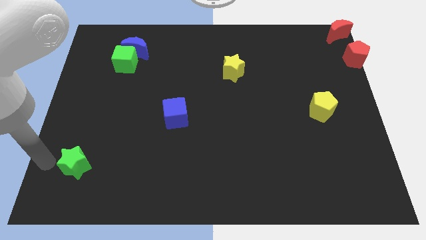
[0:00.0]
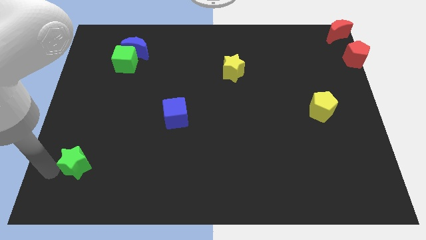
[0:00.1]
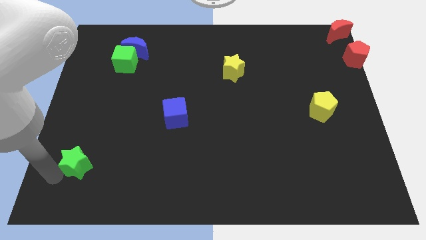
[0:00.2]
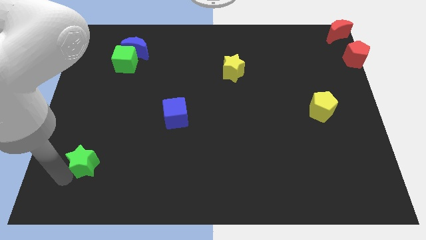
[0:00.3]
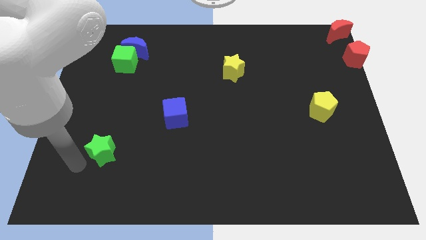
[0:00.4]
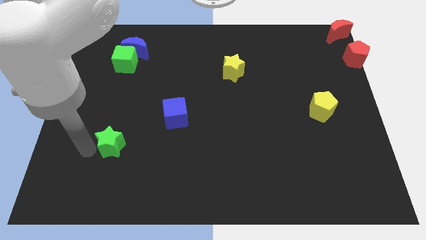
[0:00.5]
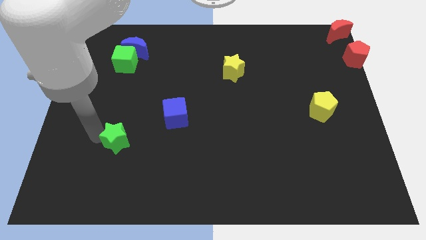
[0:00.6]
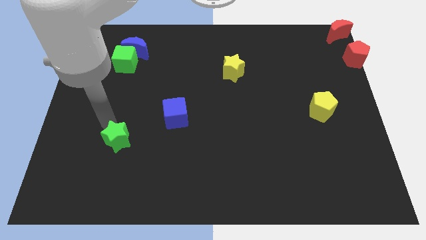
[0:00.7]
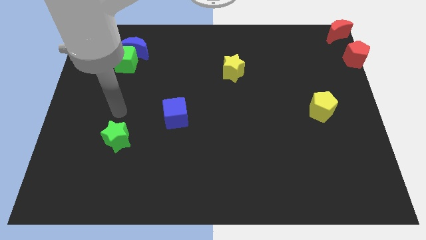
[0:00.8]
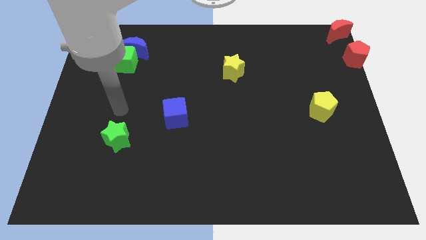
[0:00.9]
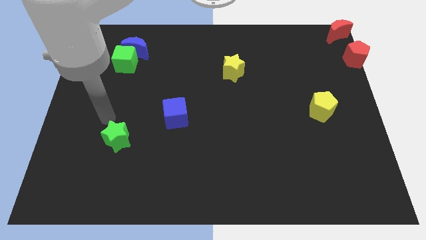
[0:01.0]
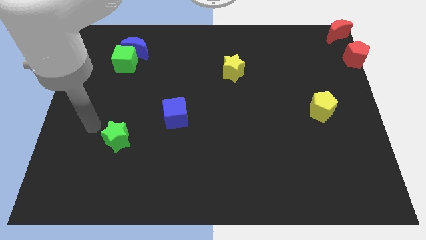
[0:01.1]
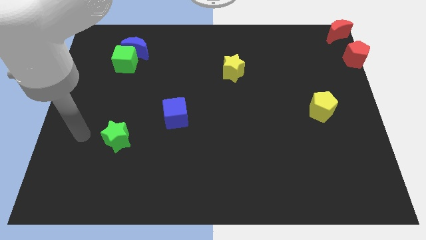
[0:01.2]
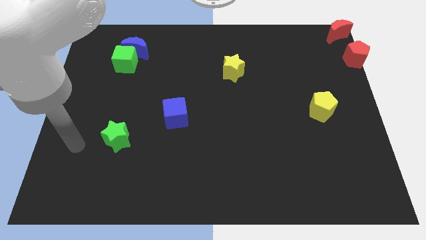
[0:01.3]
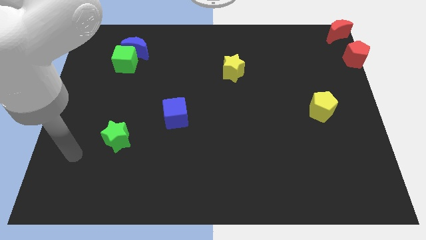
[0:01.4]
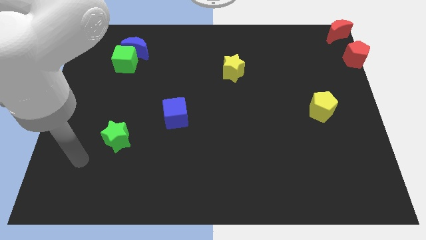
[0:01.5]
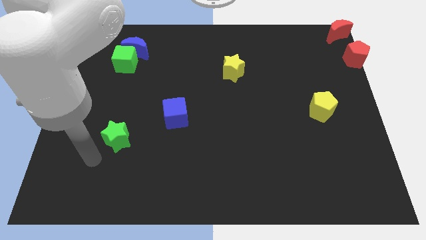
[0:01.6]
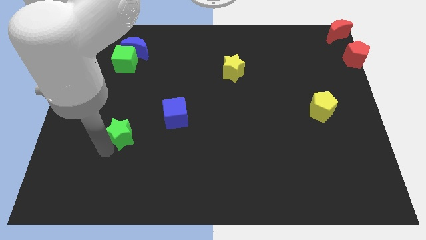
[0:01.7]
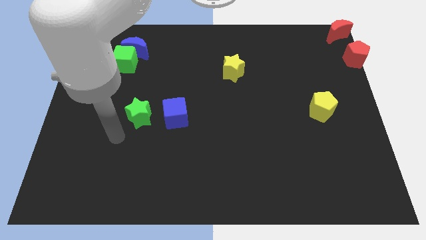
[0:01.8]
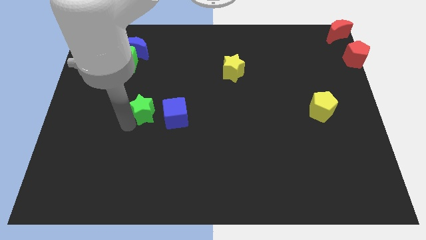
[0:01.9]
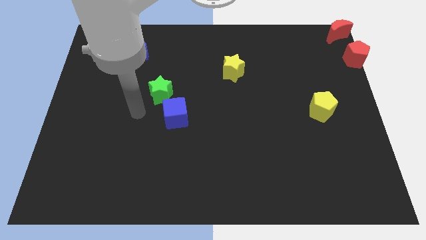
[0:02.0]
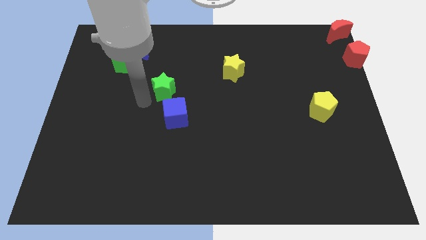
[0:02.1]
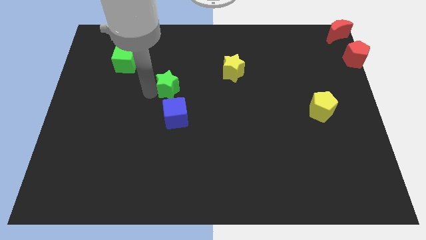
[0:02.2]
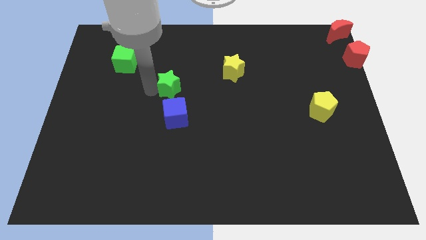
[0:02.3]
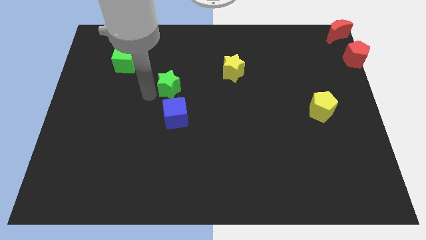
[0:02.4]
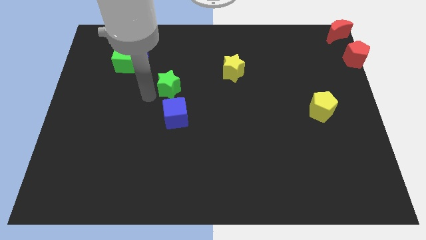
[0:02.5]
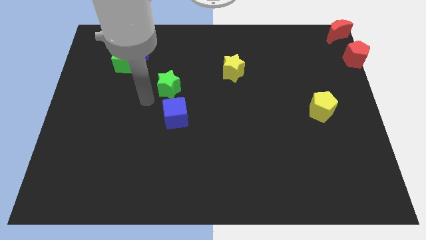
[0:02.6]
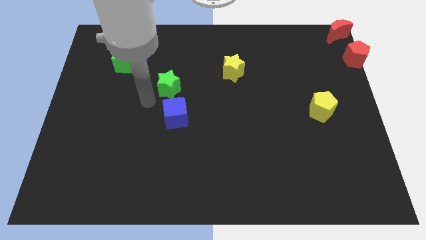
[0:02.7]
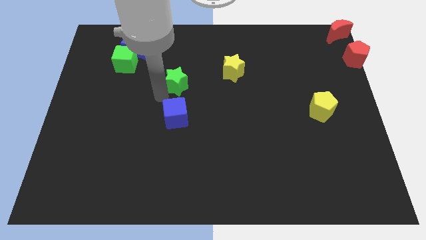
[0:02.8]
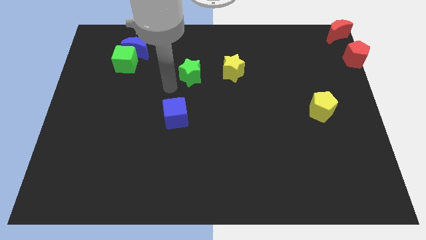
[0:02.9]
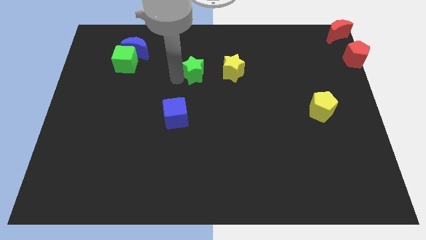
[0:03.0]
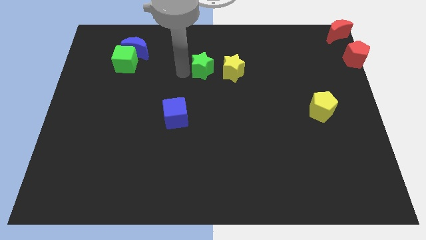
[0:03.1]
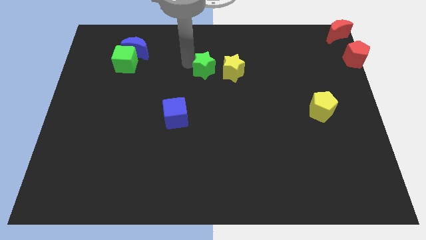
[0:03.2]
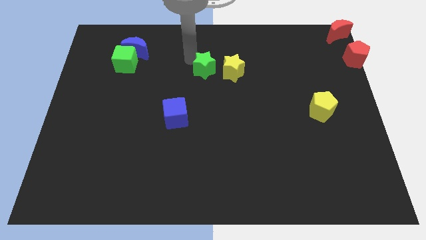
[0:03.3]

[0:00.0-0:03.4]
move the green star parallel left to the yellow star

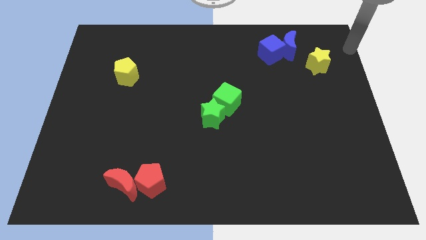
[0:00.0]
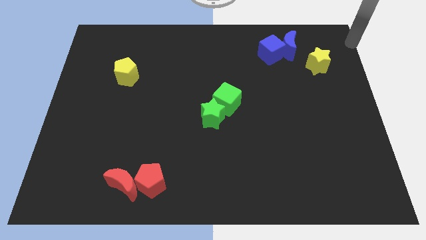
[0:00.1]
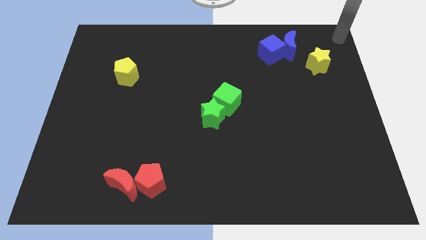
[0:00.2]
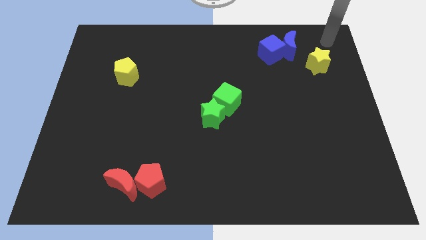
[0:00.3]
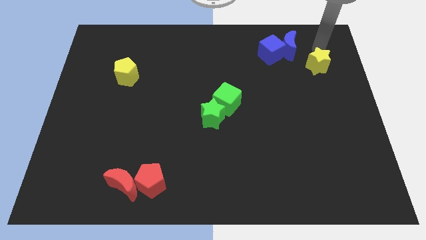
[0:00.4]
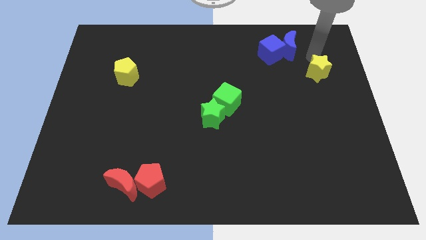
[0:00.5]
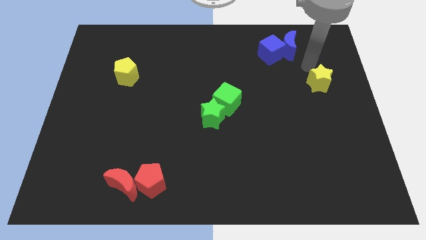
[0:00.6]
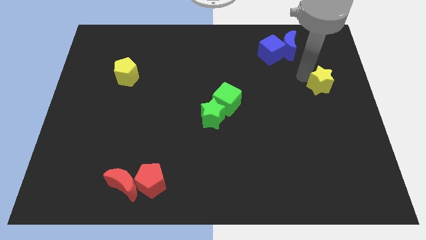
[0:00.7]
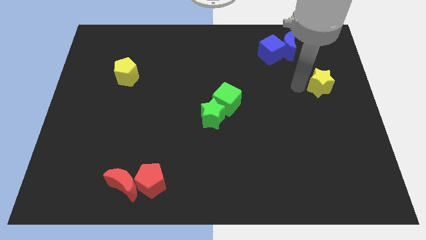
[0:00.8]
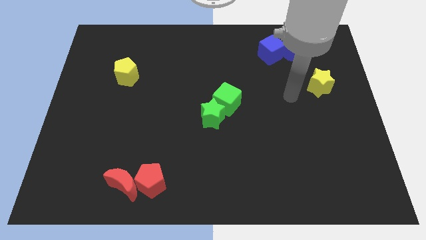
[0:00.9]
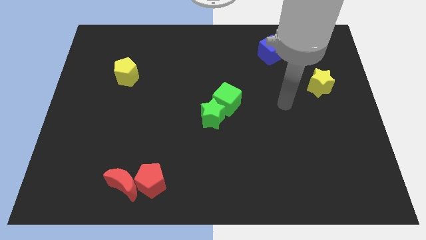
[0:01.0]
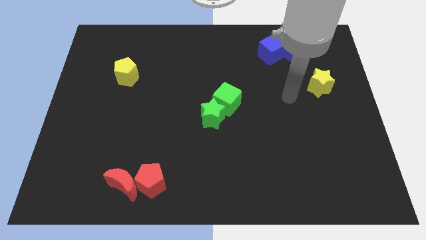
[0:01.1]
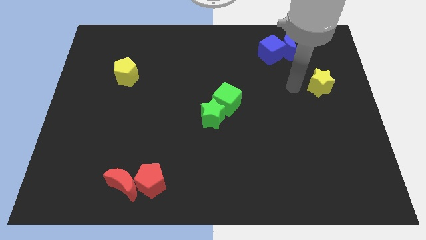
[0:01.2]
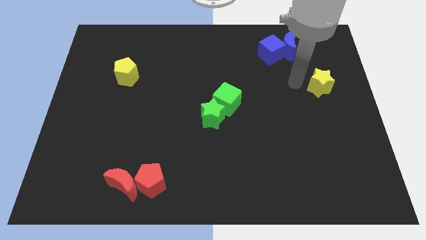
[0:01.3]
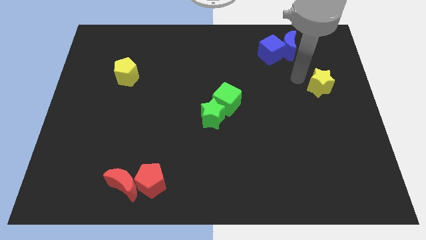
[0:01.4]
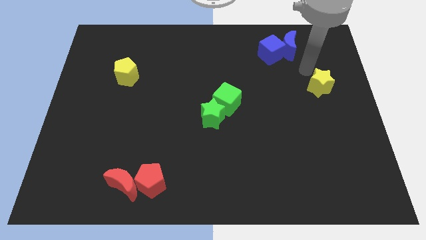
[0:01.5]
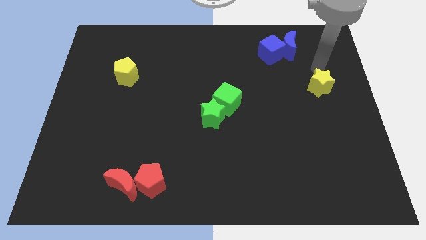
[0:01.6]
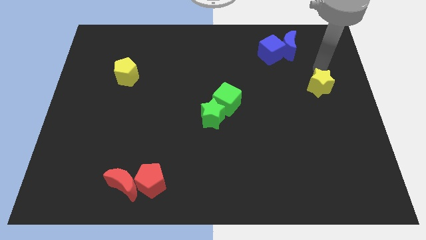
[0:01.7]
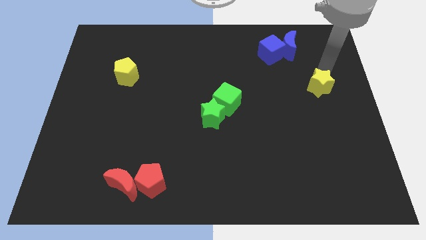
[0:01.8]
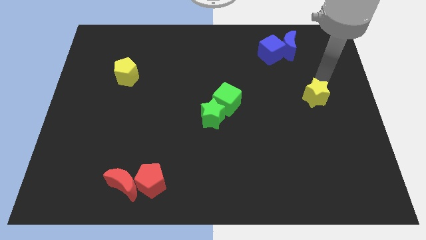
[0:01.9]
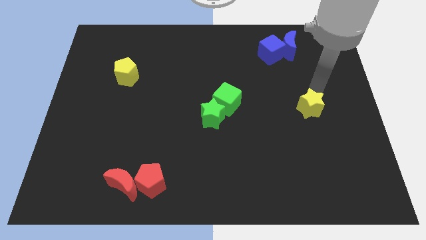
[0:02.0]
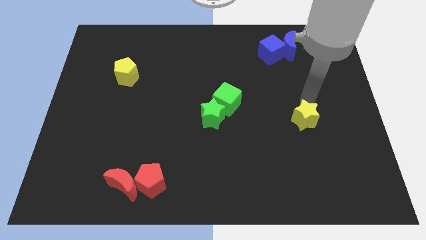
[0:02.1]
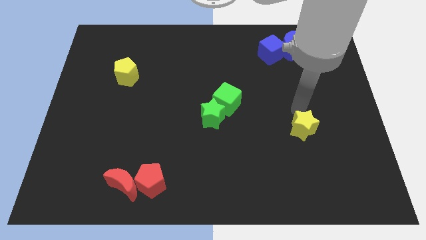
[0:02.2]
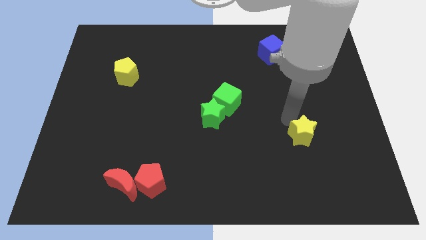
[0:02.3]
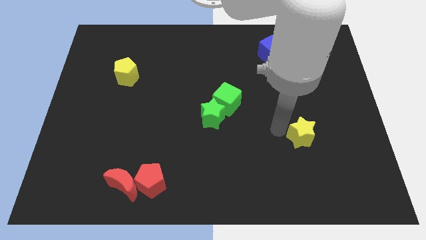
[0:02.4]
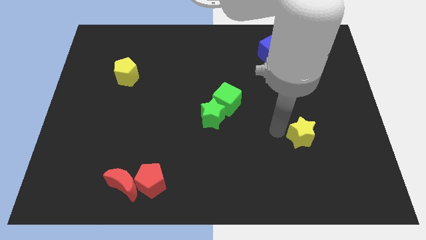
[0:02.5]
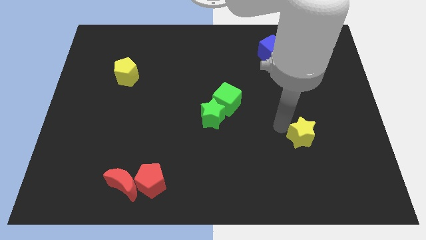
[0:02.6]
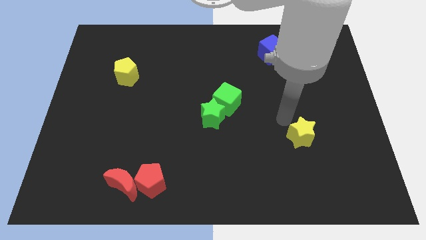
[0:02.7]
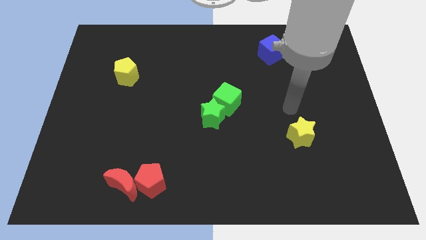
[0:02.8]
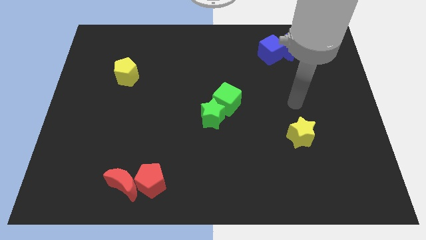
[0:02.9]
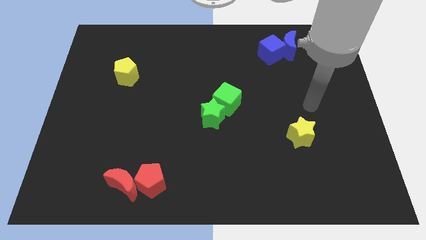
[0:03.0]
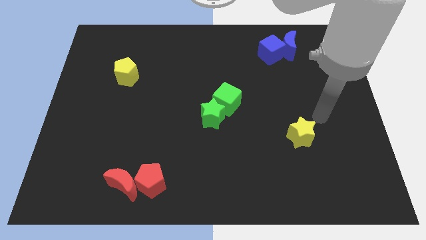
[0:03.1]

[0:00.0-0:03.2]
push the yellow star slightly towards down

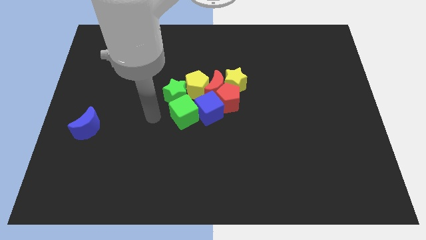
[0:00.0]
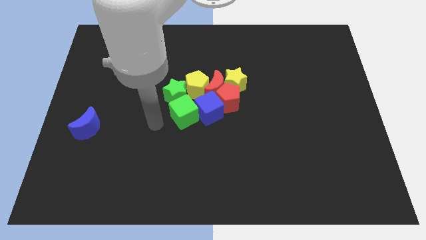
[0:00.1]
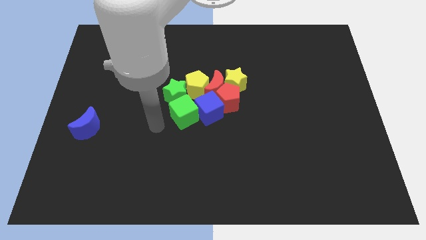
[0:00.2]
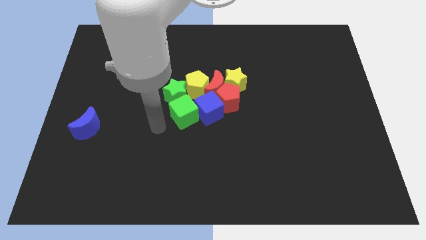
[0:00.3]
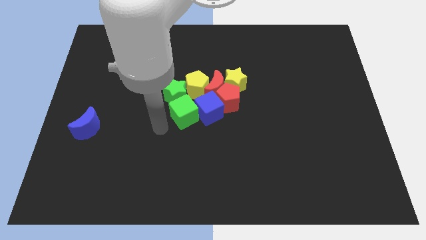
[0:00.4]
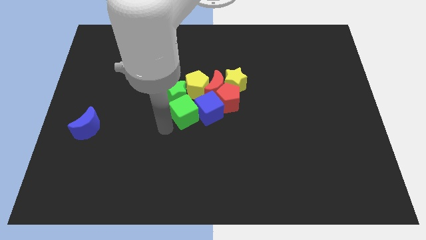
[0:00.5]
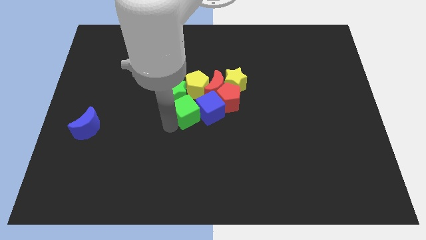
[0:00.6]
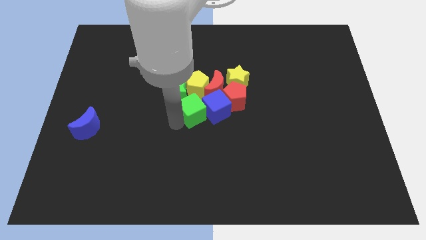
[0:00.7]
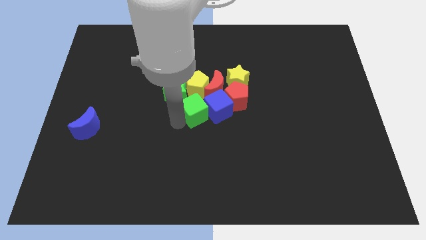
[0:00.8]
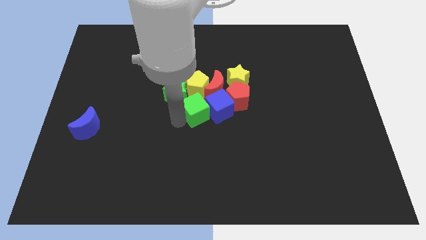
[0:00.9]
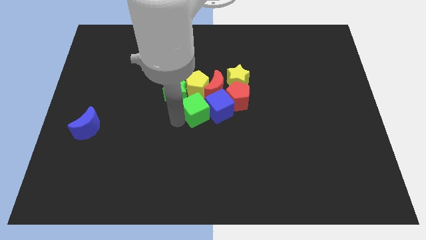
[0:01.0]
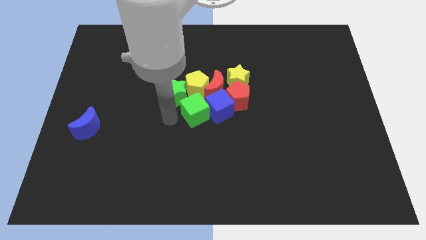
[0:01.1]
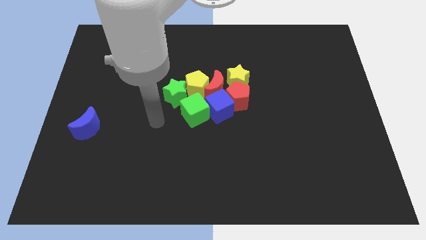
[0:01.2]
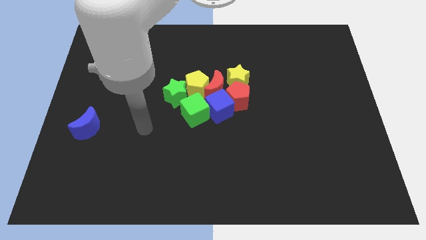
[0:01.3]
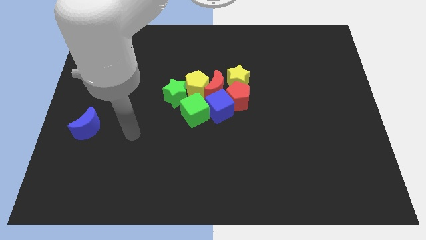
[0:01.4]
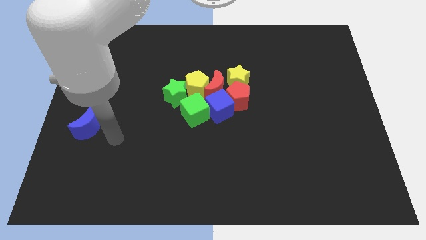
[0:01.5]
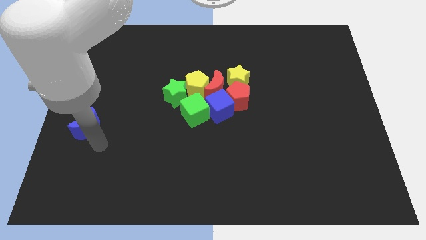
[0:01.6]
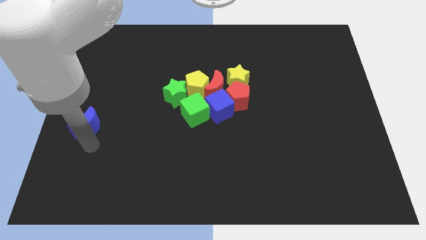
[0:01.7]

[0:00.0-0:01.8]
slightly move the green cube towards center

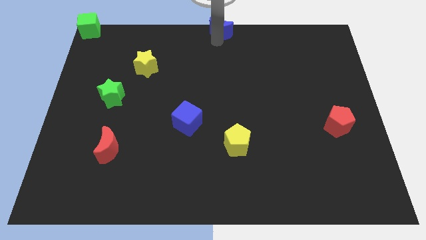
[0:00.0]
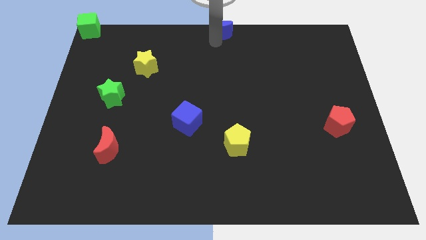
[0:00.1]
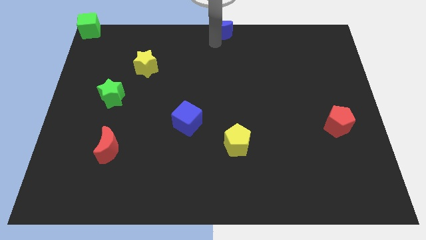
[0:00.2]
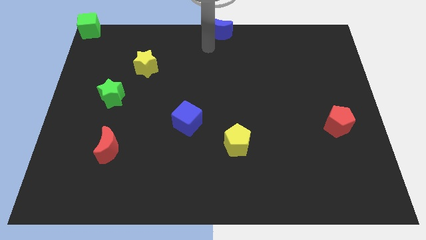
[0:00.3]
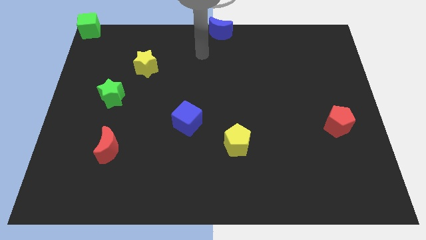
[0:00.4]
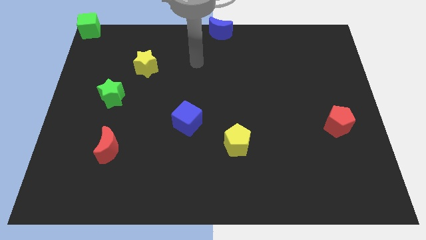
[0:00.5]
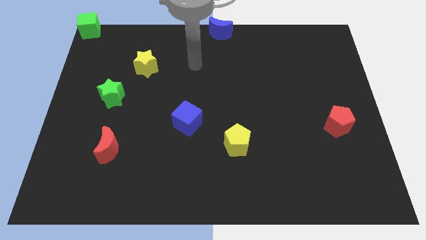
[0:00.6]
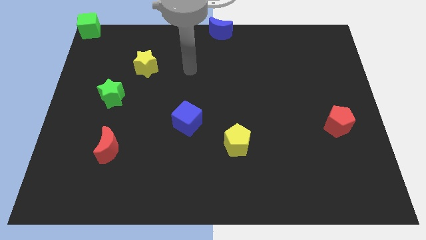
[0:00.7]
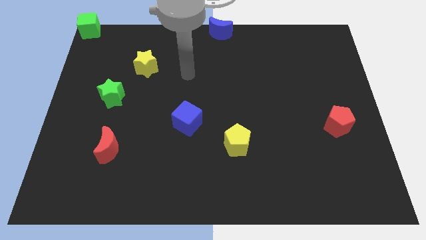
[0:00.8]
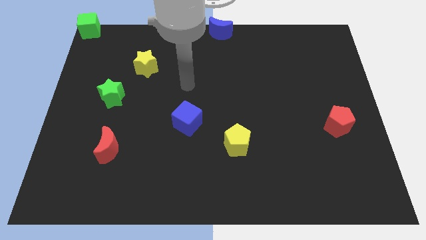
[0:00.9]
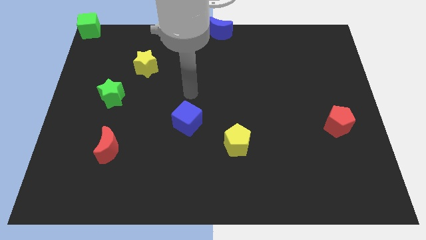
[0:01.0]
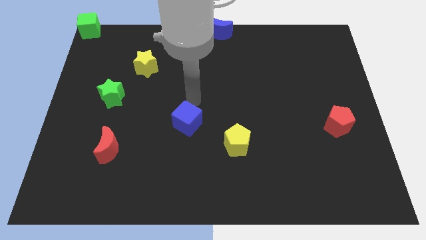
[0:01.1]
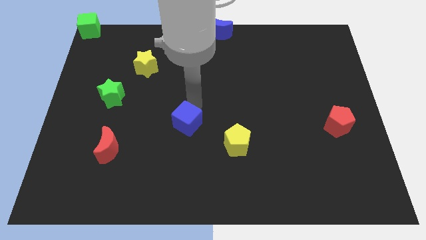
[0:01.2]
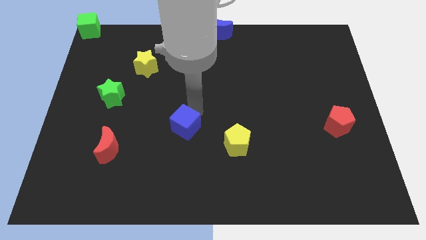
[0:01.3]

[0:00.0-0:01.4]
place the arm above the blue cube
